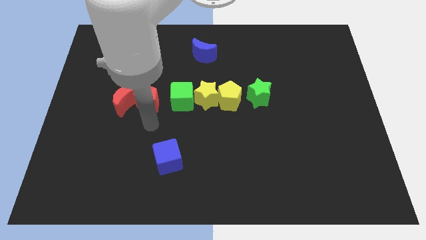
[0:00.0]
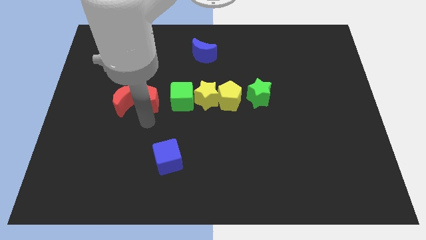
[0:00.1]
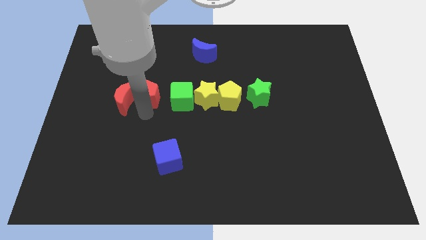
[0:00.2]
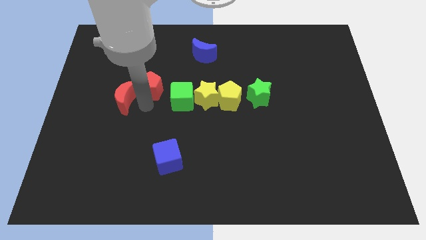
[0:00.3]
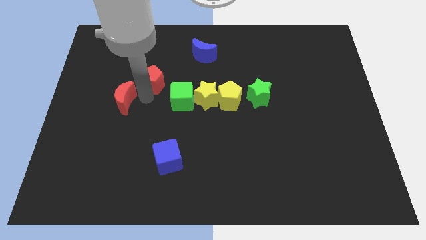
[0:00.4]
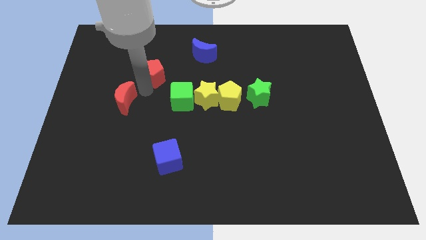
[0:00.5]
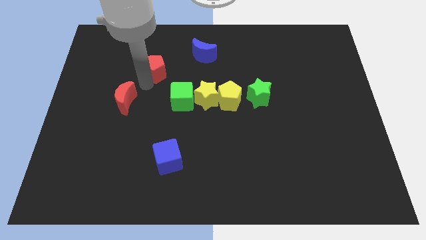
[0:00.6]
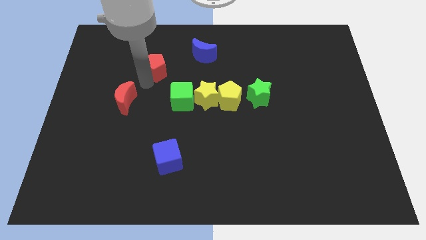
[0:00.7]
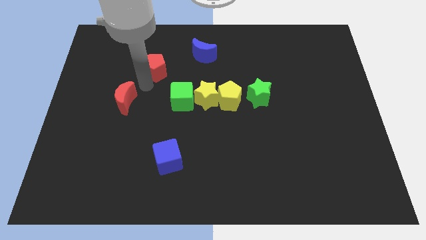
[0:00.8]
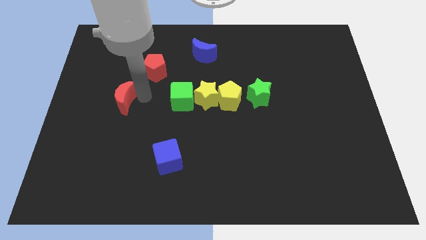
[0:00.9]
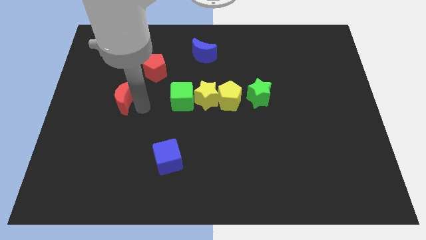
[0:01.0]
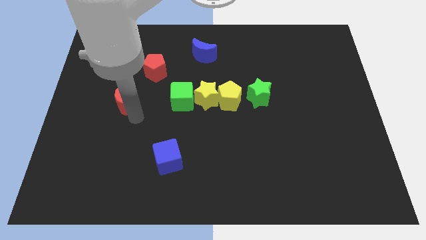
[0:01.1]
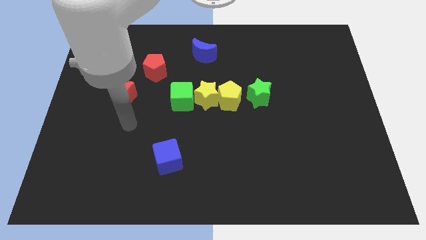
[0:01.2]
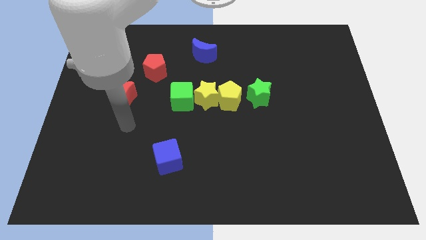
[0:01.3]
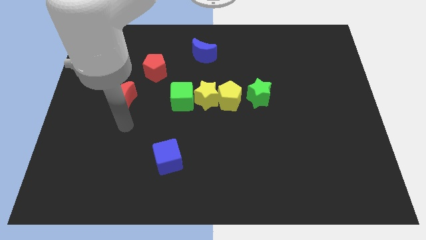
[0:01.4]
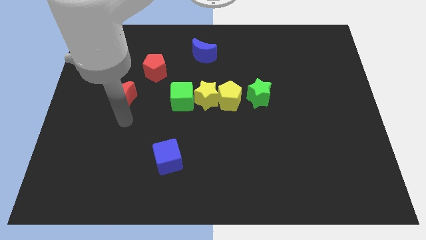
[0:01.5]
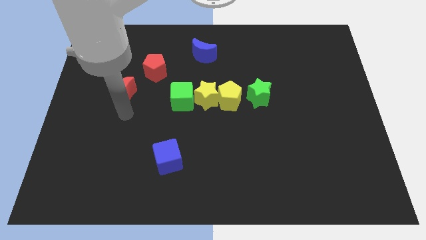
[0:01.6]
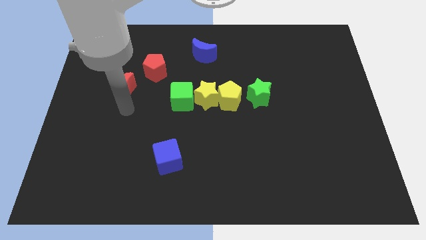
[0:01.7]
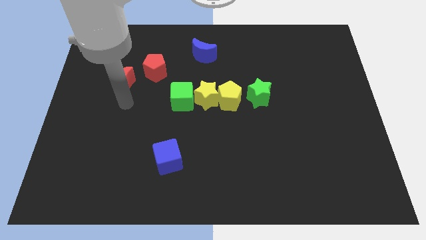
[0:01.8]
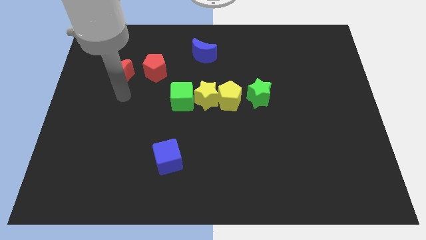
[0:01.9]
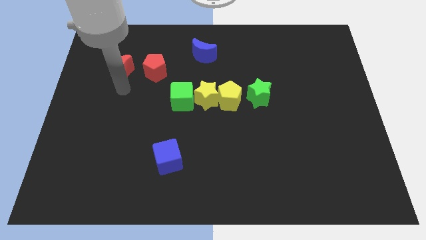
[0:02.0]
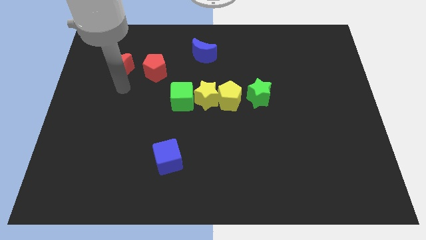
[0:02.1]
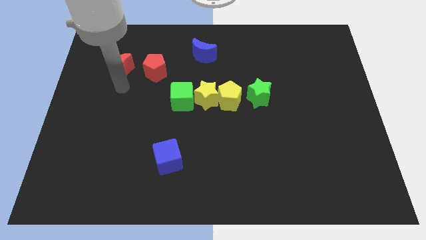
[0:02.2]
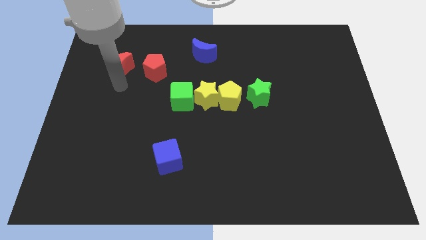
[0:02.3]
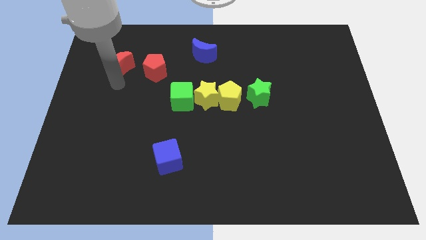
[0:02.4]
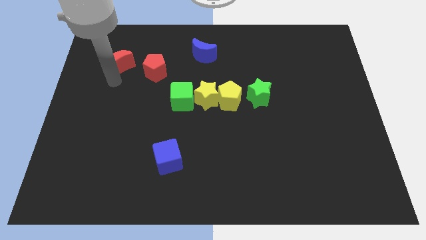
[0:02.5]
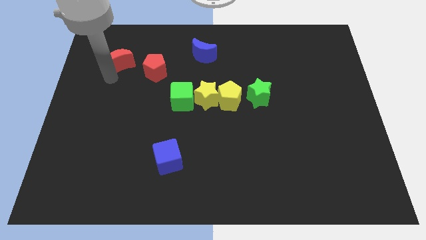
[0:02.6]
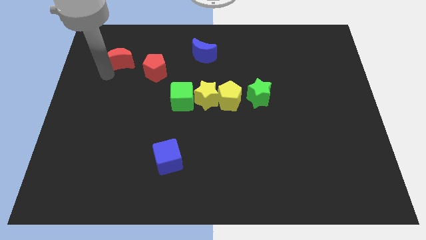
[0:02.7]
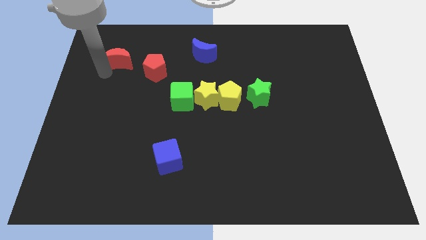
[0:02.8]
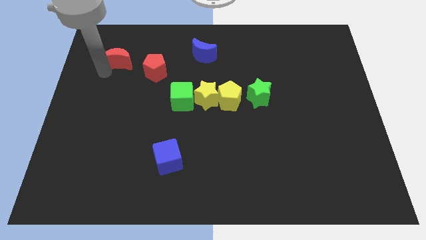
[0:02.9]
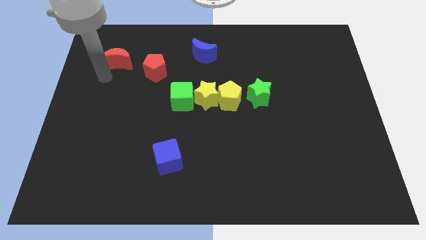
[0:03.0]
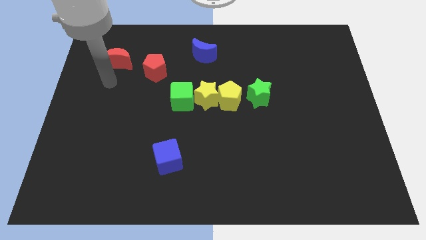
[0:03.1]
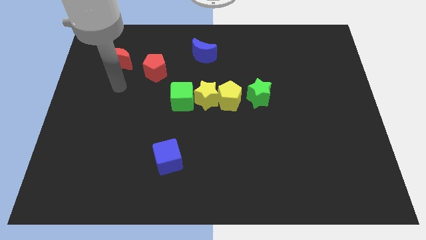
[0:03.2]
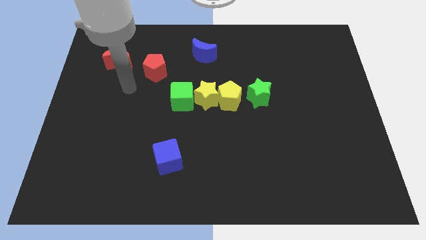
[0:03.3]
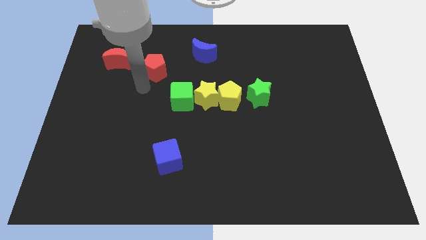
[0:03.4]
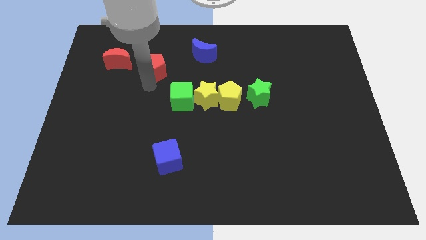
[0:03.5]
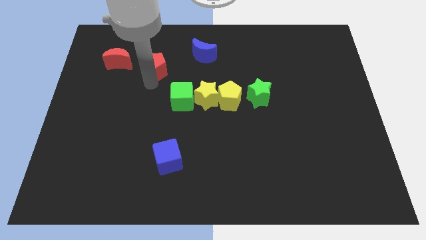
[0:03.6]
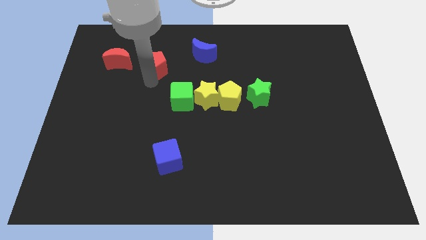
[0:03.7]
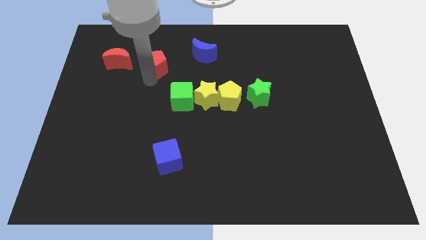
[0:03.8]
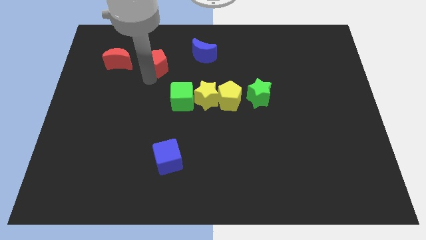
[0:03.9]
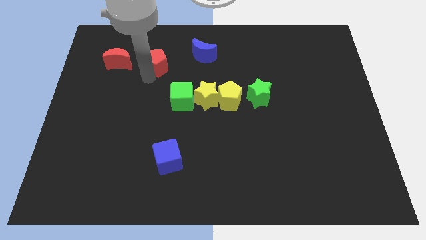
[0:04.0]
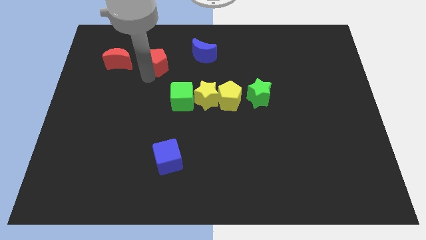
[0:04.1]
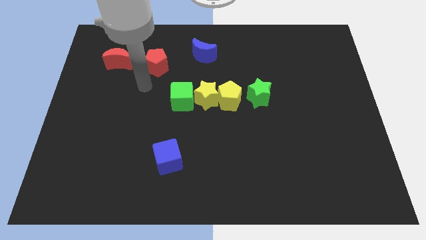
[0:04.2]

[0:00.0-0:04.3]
move the red blocks diagonally top left to the green cube

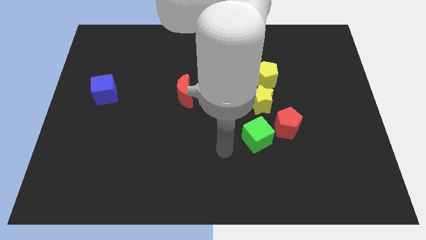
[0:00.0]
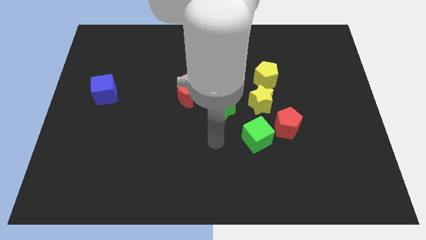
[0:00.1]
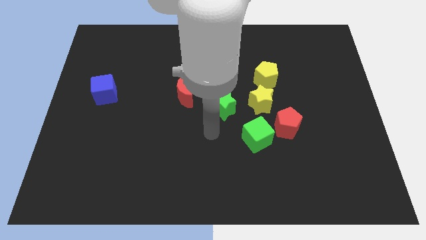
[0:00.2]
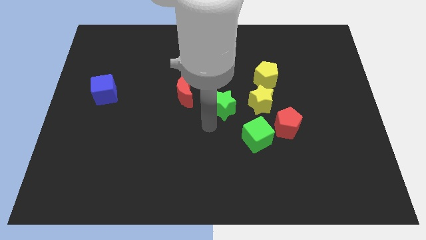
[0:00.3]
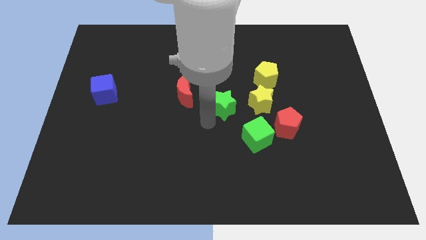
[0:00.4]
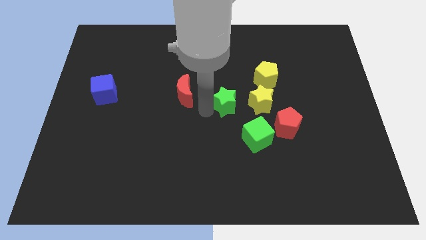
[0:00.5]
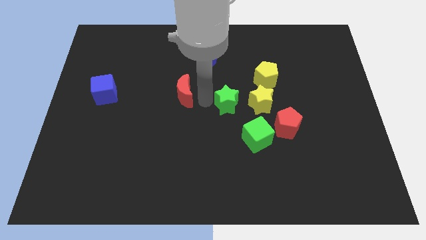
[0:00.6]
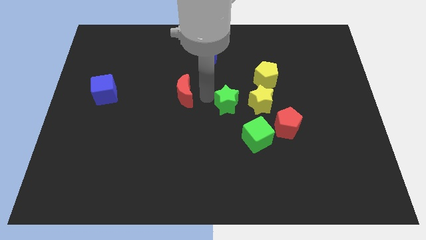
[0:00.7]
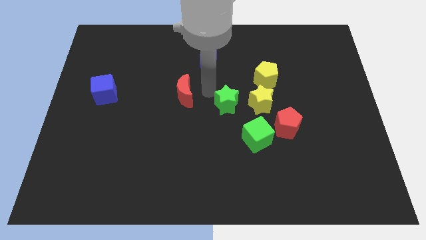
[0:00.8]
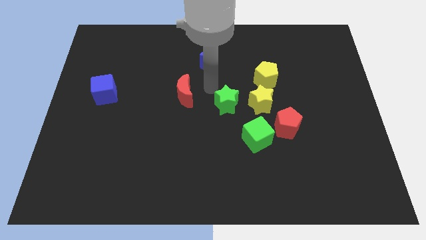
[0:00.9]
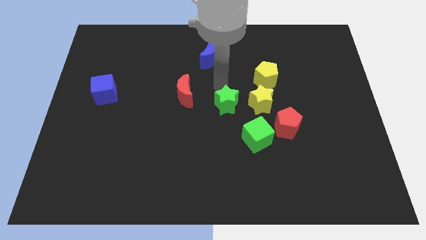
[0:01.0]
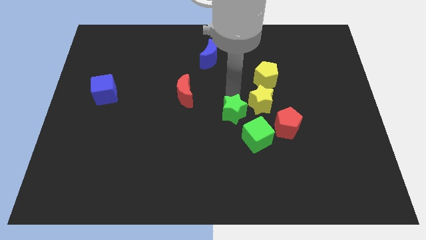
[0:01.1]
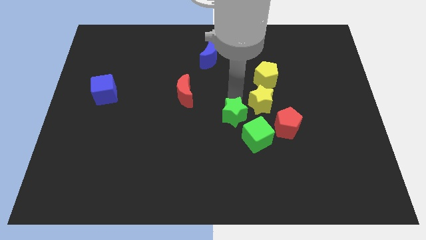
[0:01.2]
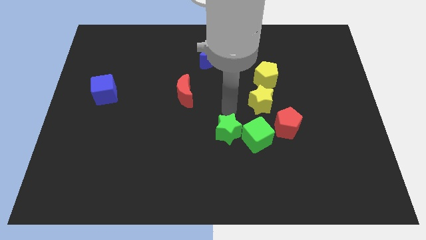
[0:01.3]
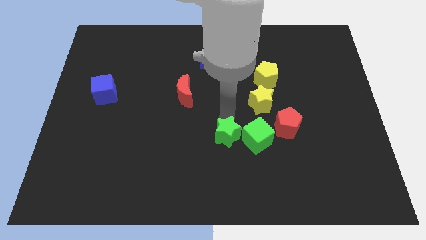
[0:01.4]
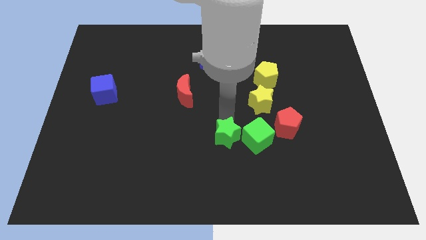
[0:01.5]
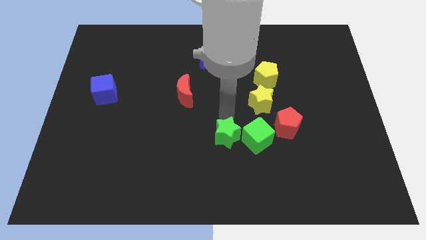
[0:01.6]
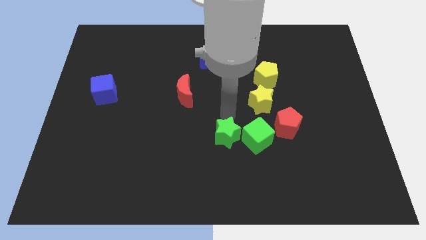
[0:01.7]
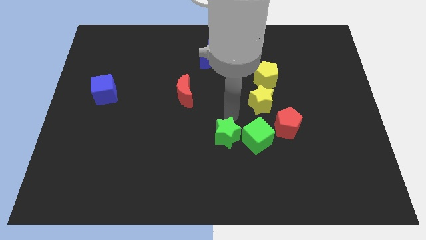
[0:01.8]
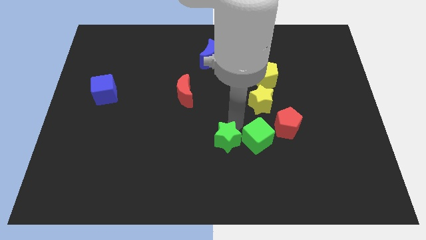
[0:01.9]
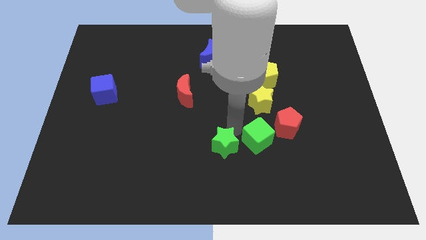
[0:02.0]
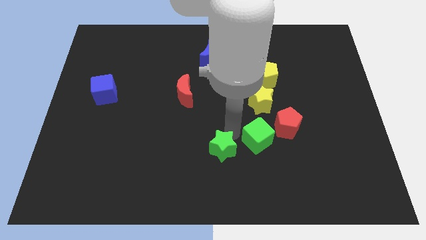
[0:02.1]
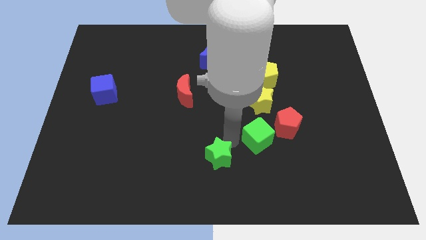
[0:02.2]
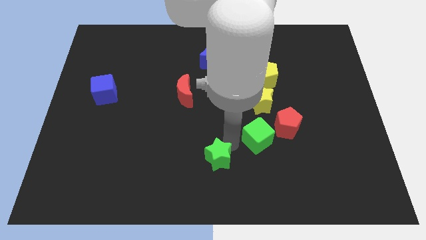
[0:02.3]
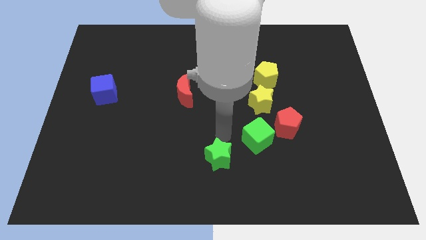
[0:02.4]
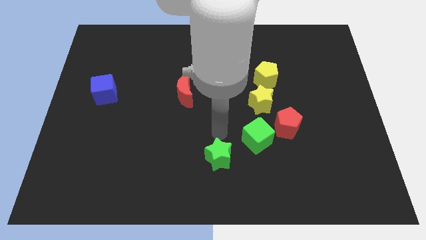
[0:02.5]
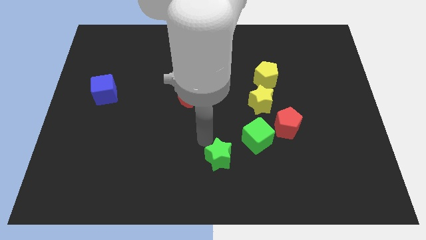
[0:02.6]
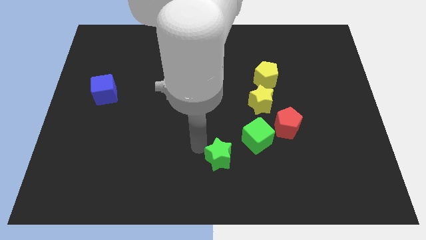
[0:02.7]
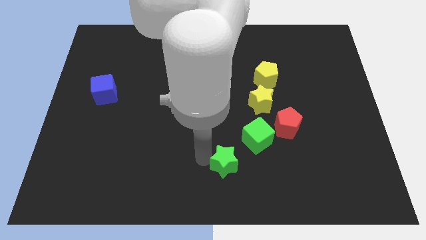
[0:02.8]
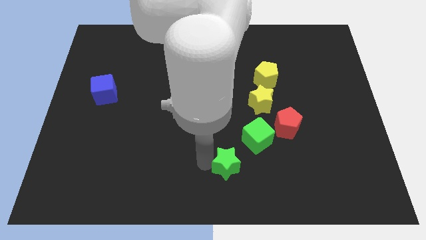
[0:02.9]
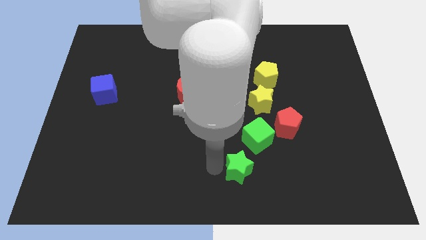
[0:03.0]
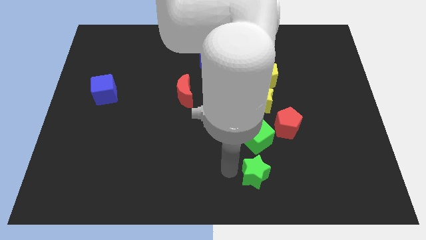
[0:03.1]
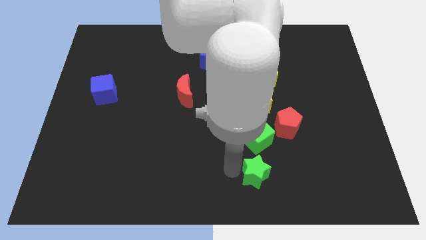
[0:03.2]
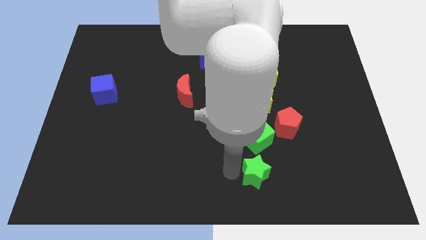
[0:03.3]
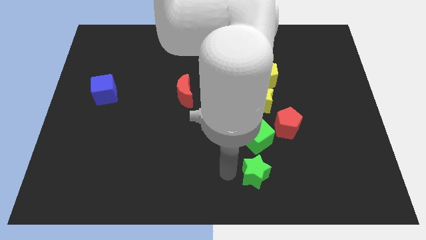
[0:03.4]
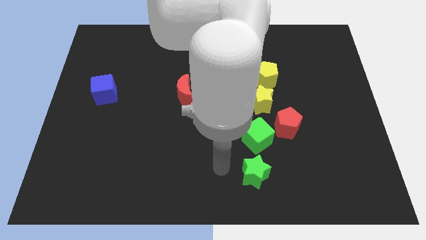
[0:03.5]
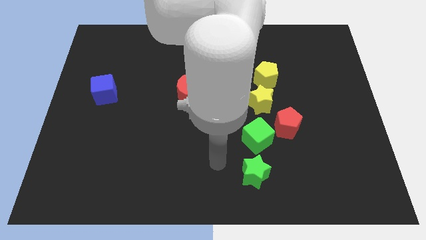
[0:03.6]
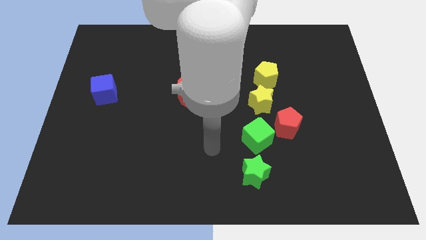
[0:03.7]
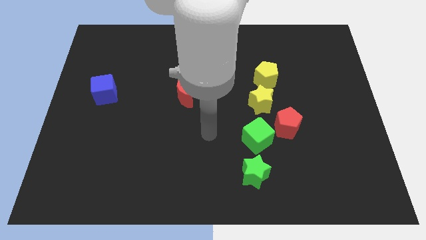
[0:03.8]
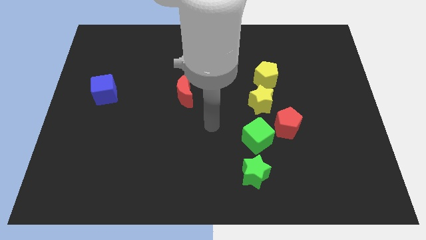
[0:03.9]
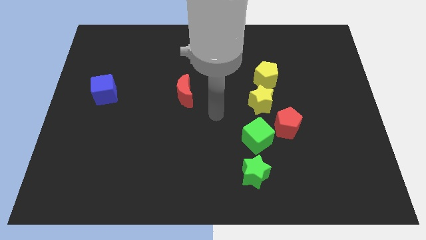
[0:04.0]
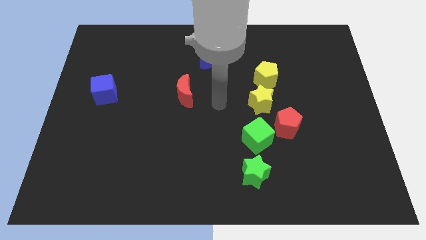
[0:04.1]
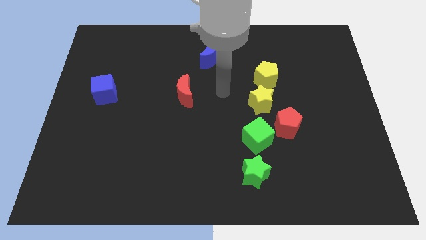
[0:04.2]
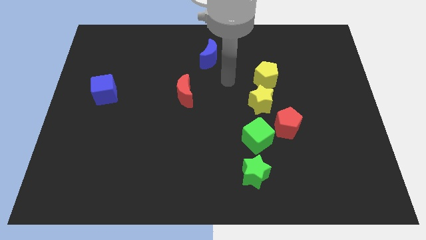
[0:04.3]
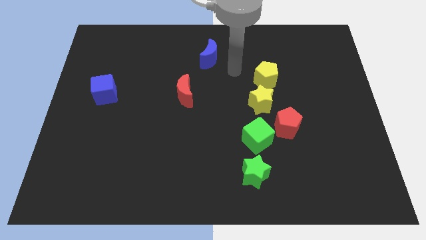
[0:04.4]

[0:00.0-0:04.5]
place the green star below the green cube

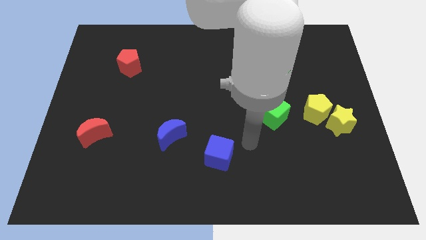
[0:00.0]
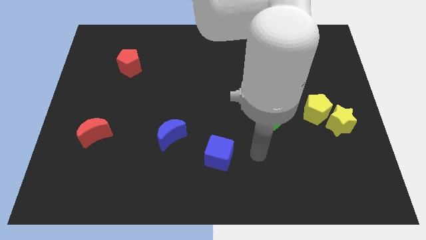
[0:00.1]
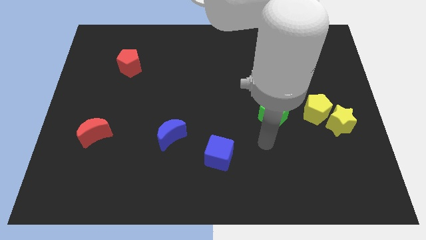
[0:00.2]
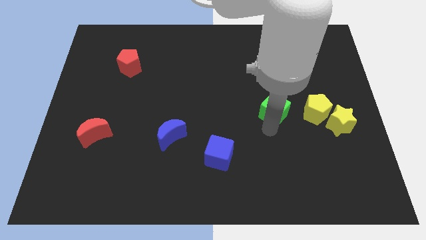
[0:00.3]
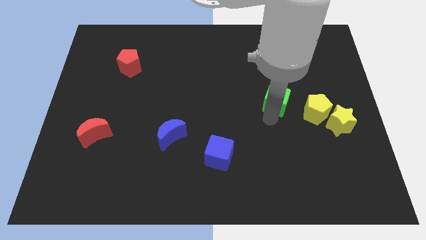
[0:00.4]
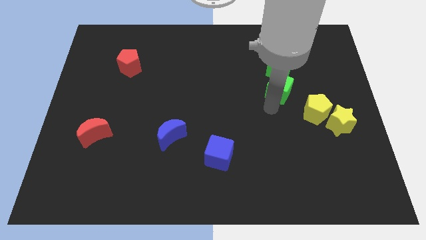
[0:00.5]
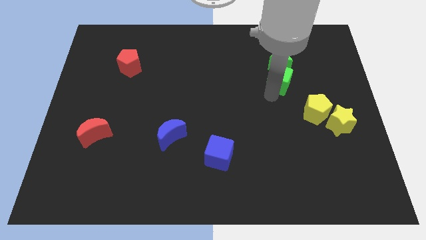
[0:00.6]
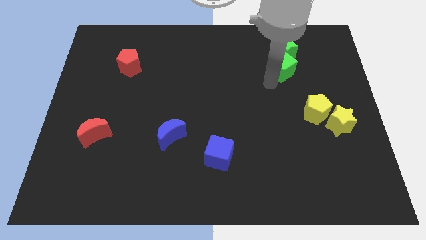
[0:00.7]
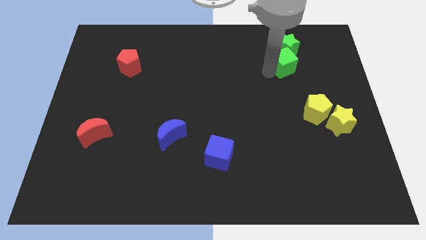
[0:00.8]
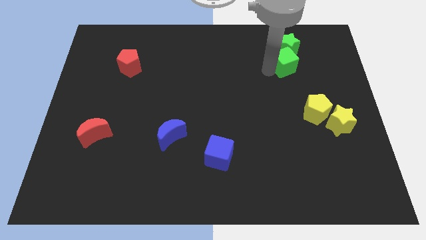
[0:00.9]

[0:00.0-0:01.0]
place the green cube below the green star
